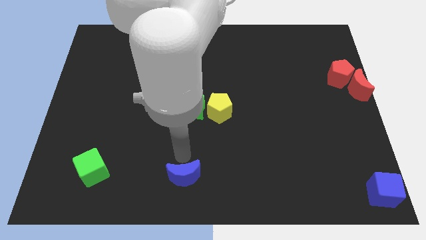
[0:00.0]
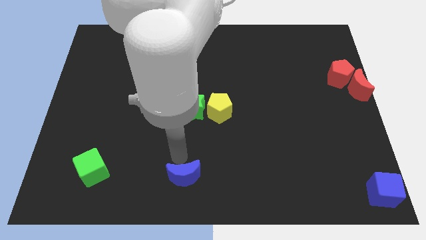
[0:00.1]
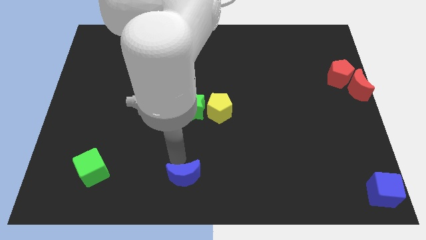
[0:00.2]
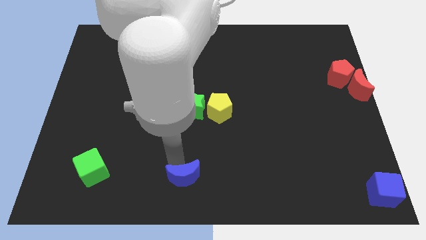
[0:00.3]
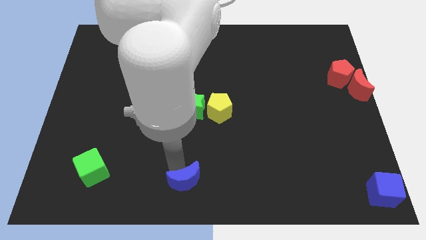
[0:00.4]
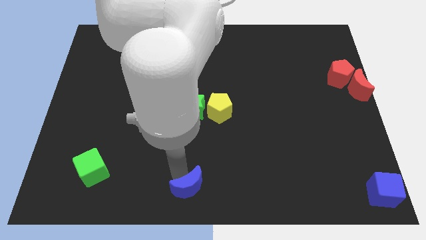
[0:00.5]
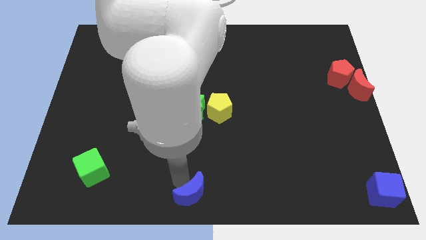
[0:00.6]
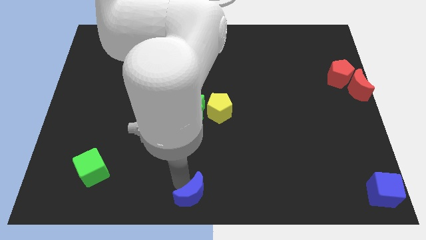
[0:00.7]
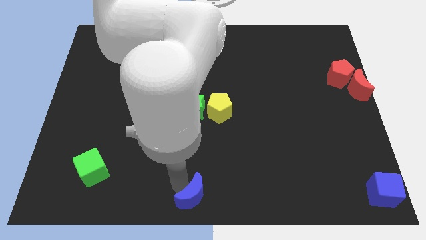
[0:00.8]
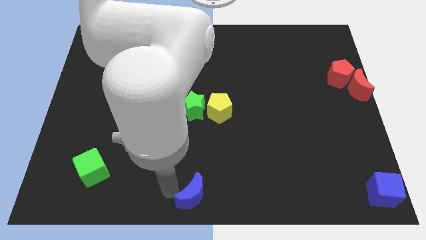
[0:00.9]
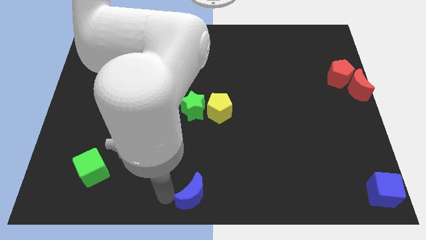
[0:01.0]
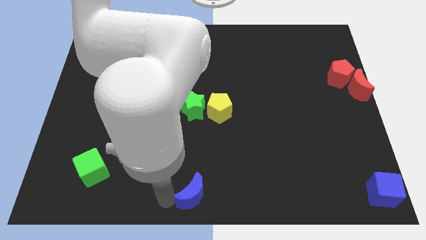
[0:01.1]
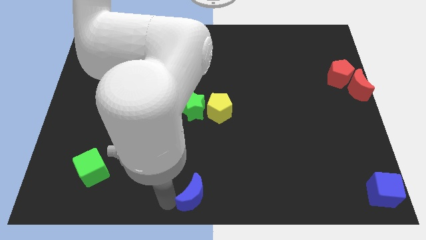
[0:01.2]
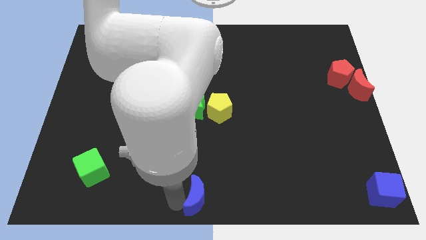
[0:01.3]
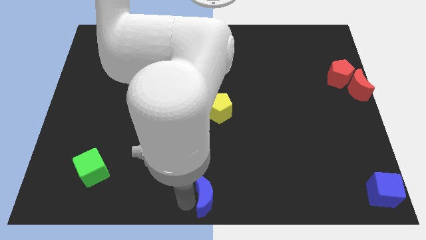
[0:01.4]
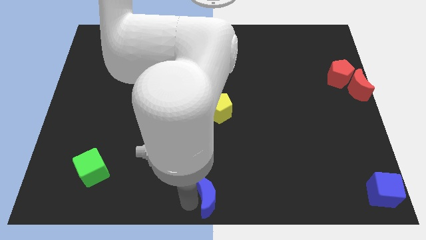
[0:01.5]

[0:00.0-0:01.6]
push the blue crecscent to the bottom center of the board

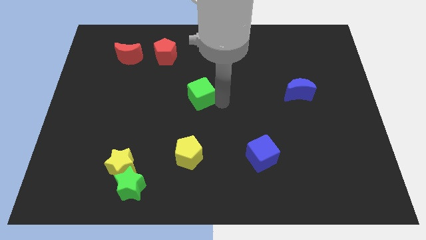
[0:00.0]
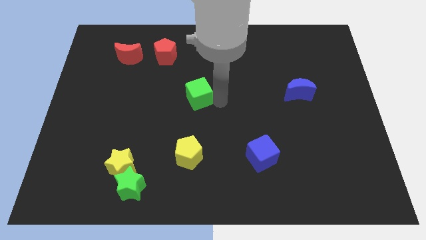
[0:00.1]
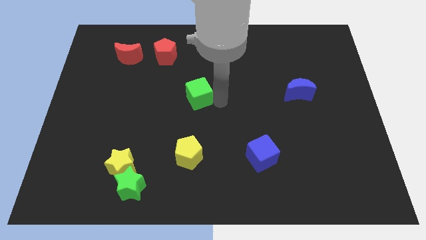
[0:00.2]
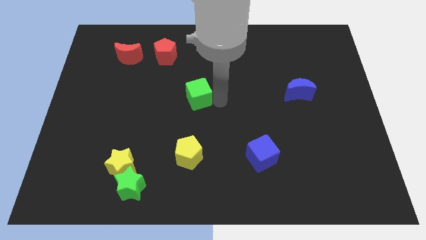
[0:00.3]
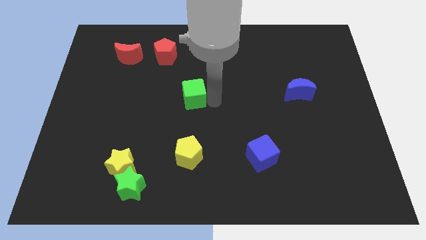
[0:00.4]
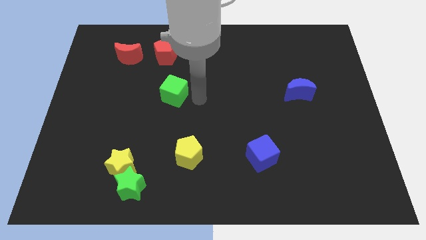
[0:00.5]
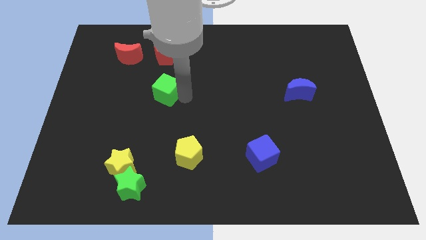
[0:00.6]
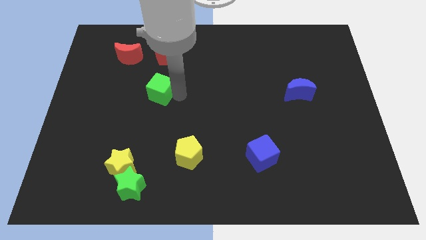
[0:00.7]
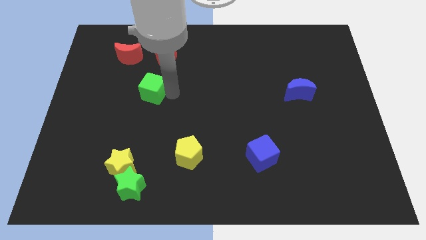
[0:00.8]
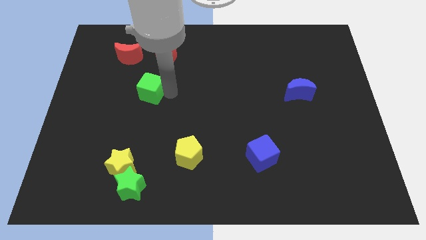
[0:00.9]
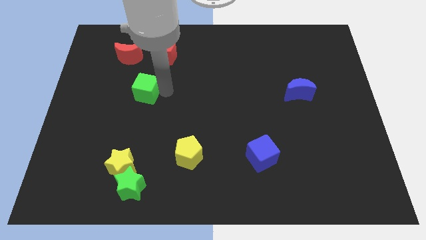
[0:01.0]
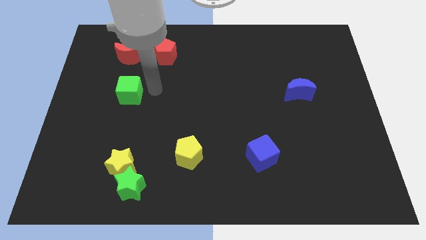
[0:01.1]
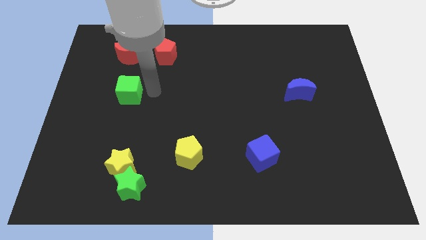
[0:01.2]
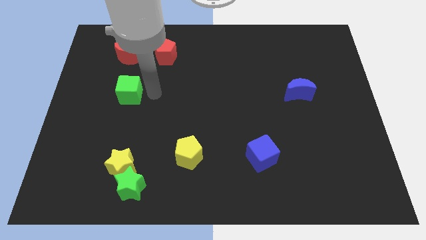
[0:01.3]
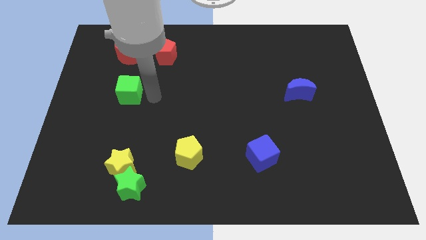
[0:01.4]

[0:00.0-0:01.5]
put the green cube below the red moon

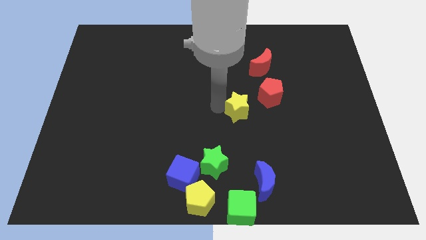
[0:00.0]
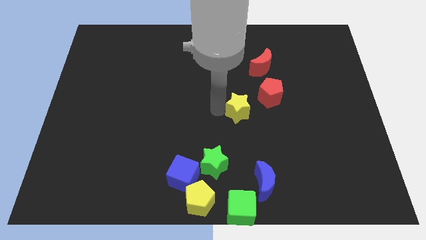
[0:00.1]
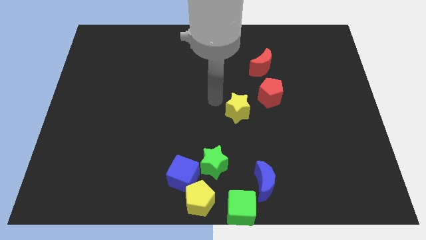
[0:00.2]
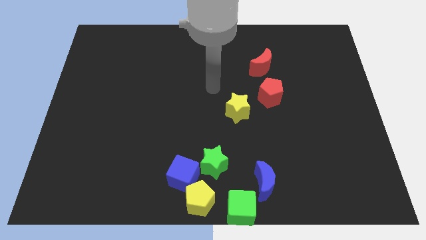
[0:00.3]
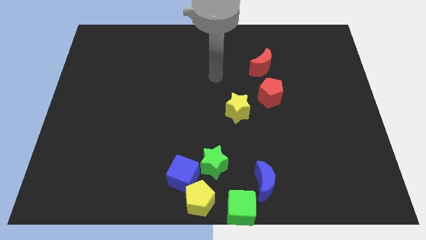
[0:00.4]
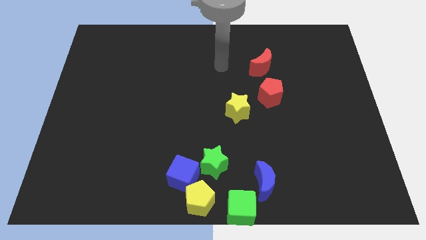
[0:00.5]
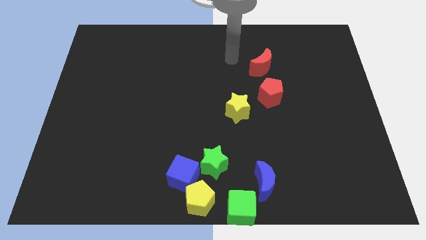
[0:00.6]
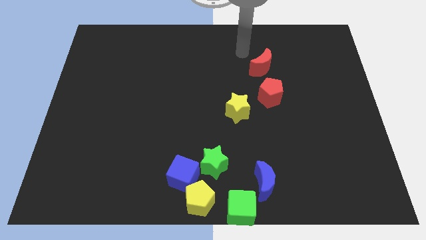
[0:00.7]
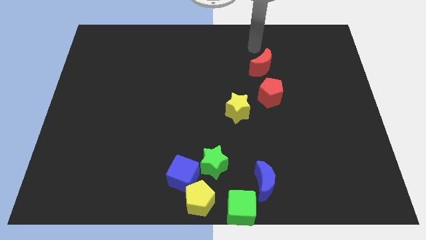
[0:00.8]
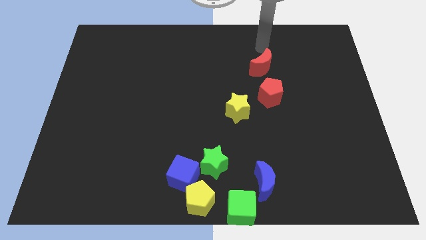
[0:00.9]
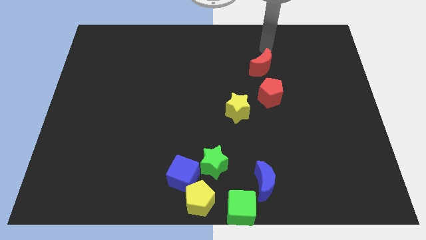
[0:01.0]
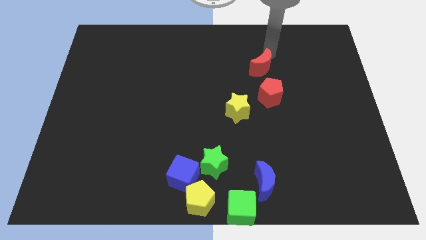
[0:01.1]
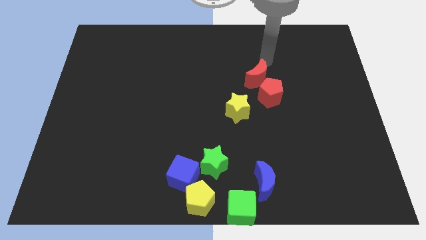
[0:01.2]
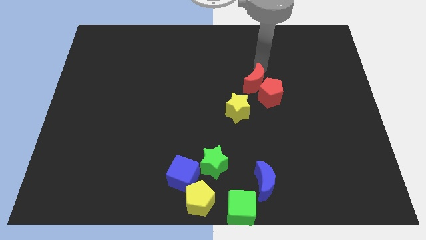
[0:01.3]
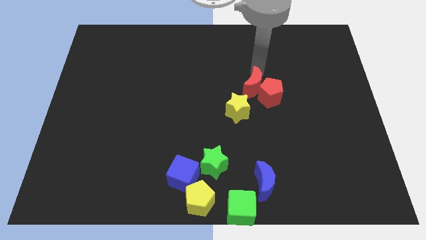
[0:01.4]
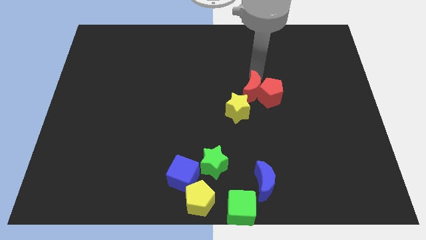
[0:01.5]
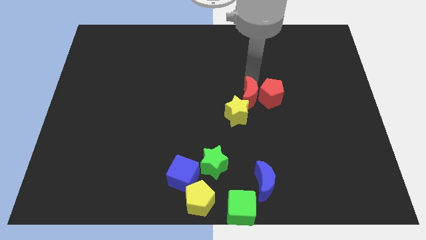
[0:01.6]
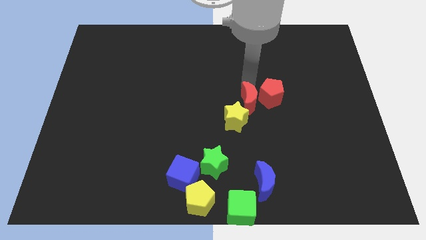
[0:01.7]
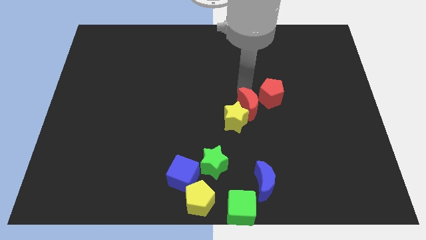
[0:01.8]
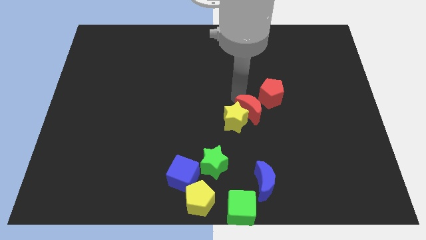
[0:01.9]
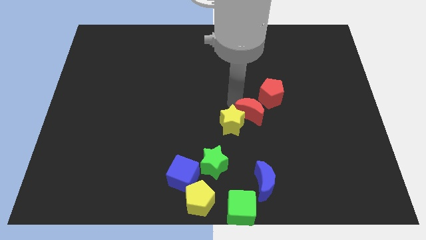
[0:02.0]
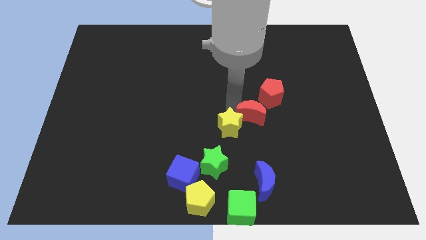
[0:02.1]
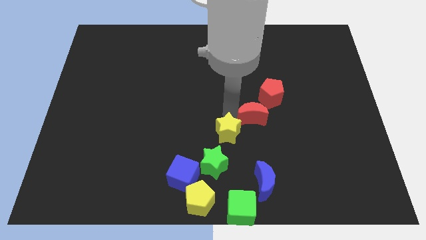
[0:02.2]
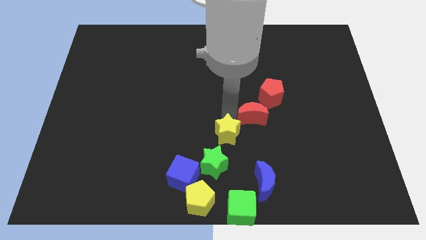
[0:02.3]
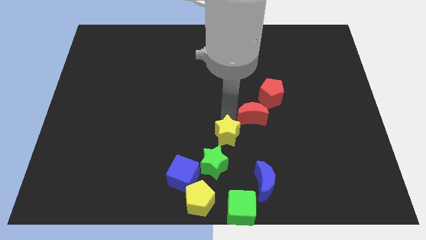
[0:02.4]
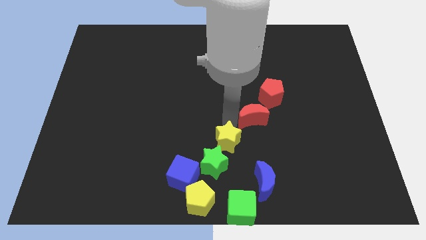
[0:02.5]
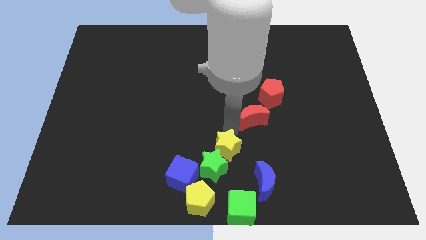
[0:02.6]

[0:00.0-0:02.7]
push the red moon into the yellow star

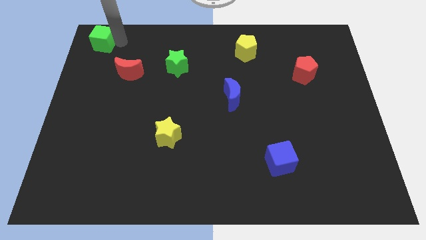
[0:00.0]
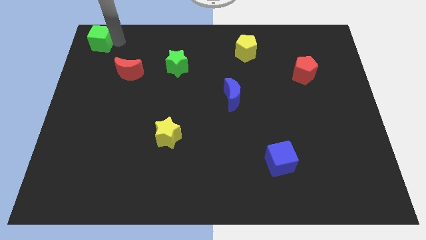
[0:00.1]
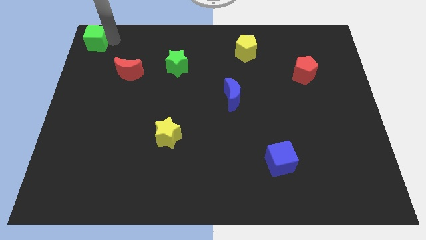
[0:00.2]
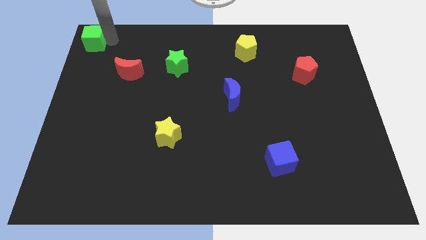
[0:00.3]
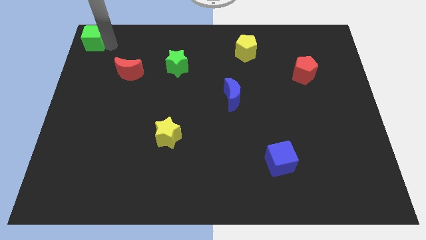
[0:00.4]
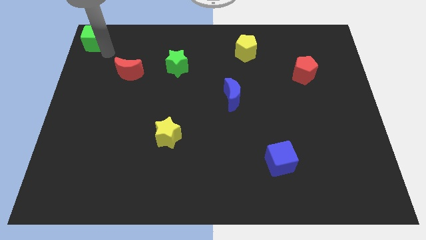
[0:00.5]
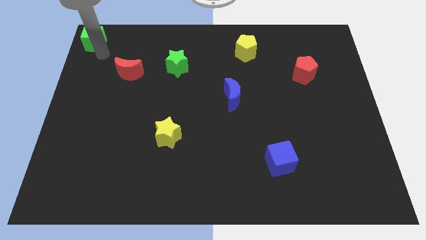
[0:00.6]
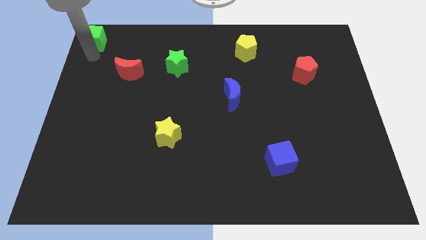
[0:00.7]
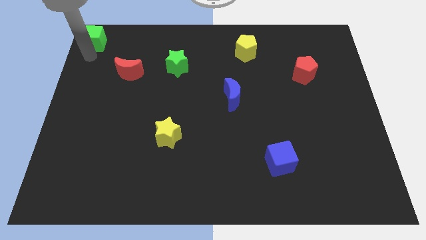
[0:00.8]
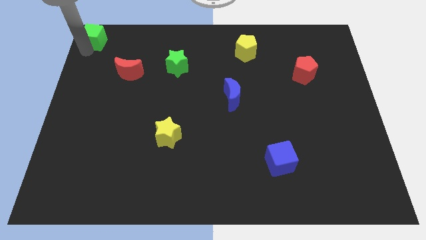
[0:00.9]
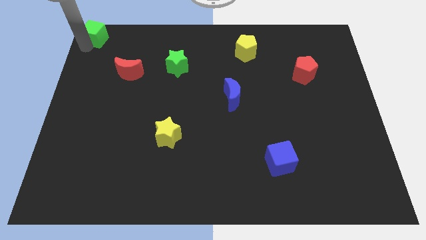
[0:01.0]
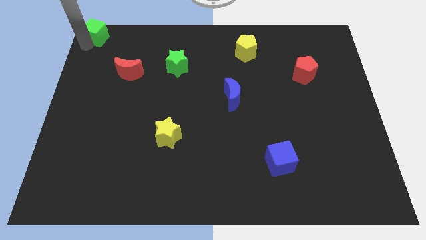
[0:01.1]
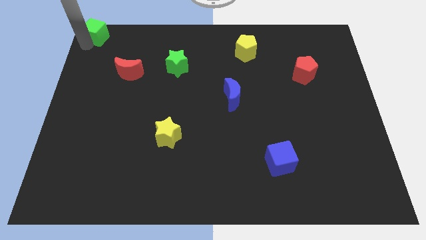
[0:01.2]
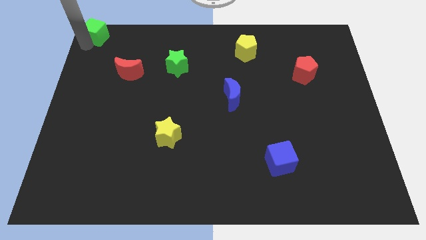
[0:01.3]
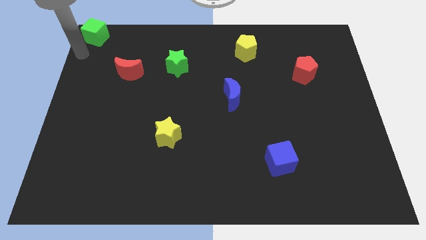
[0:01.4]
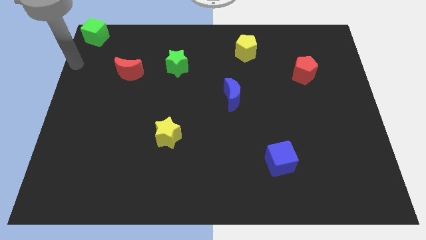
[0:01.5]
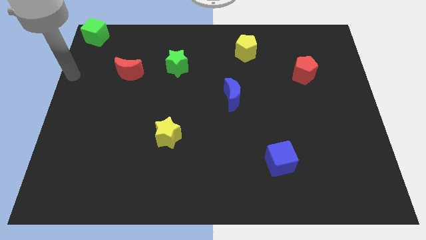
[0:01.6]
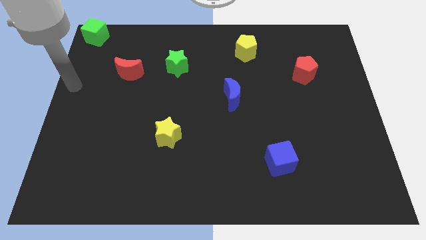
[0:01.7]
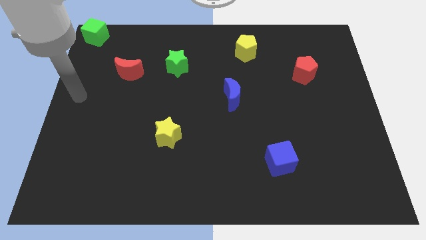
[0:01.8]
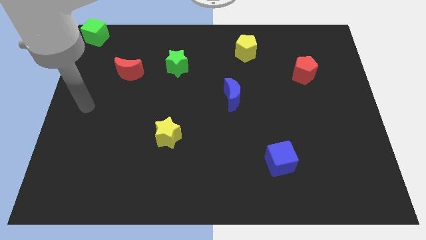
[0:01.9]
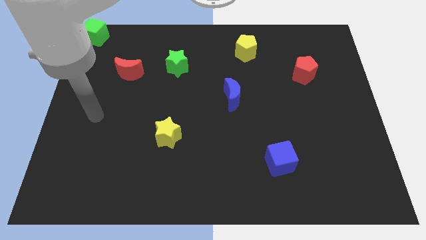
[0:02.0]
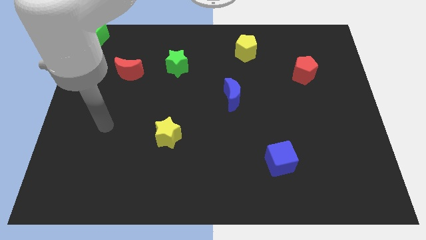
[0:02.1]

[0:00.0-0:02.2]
push green cube to the top left corner

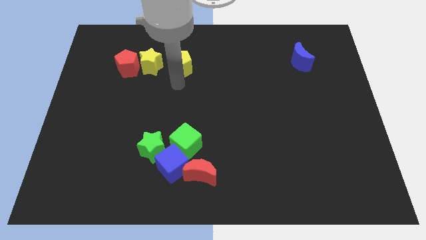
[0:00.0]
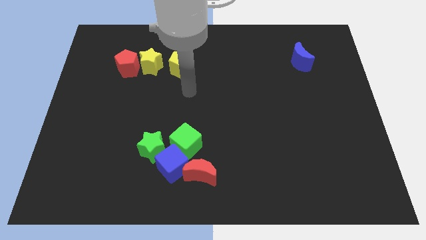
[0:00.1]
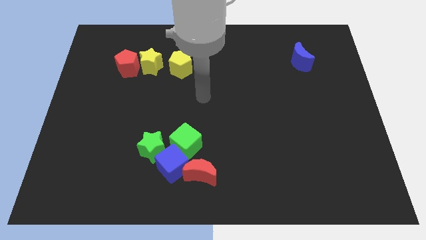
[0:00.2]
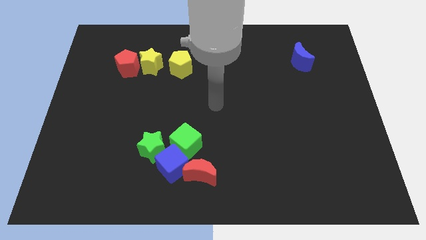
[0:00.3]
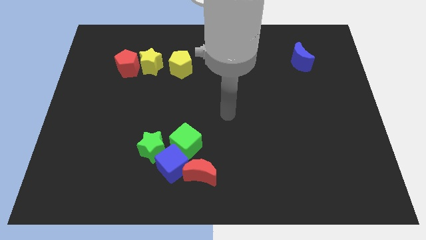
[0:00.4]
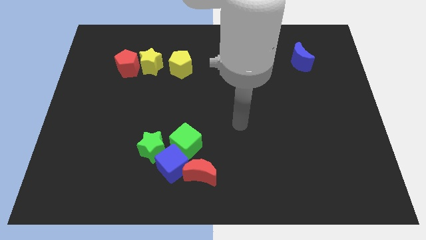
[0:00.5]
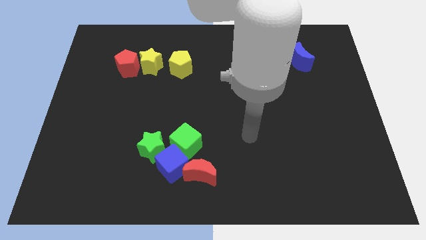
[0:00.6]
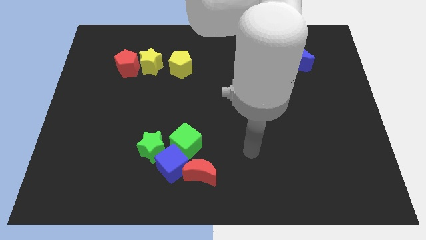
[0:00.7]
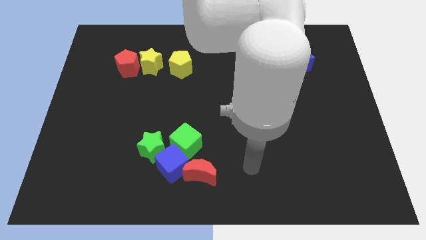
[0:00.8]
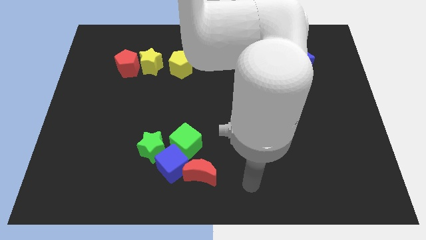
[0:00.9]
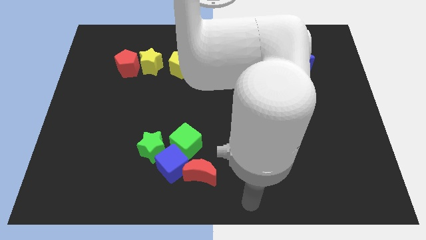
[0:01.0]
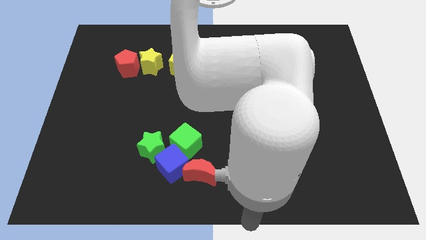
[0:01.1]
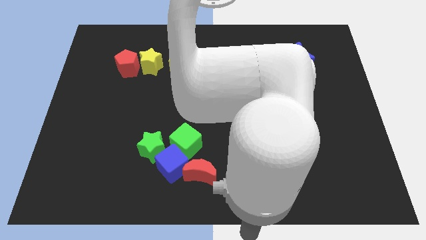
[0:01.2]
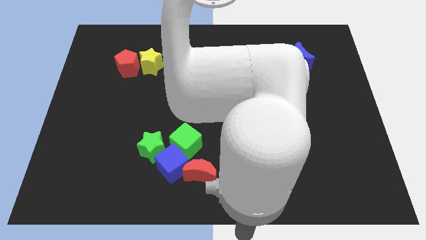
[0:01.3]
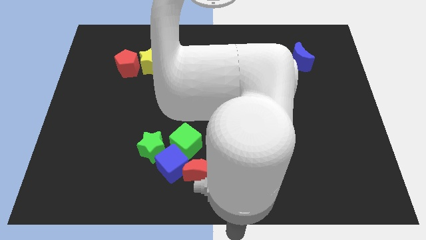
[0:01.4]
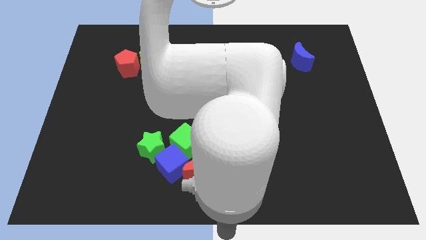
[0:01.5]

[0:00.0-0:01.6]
move your arm to the bottom center of the board
